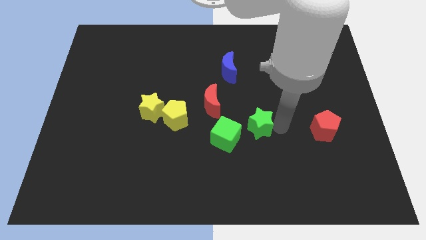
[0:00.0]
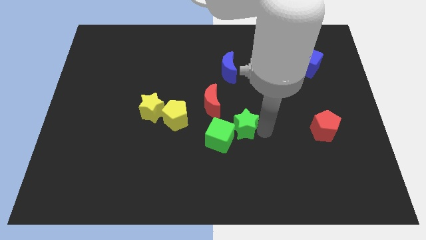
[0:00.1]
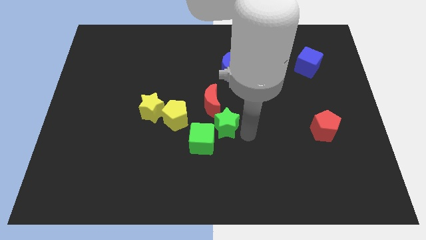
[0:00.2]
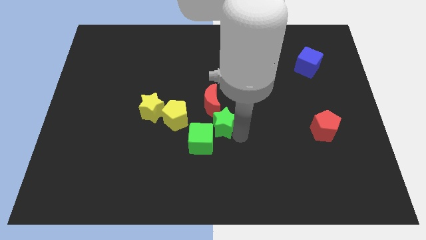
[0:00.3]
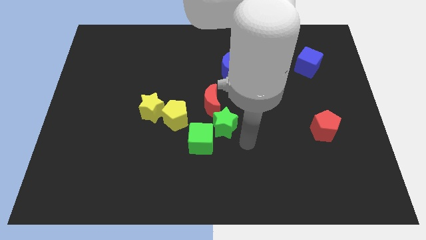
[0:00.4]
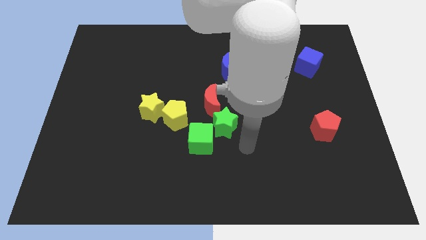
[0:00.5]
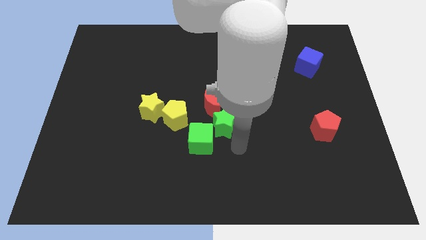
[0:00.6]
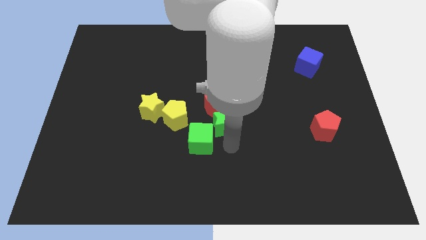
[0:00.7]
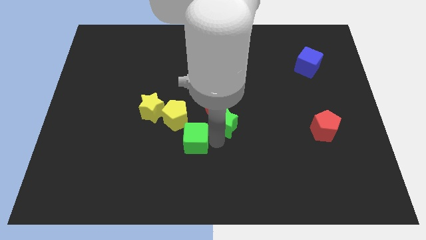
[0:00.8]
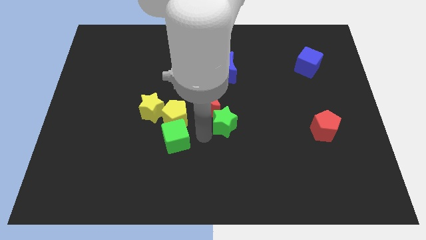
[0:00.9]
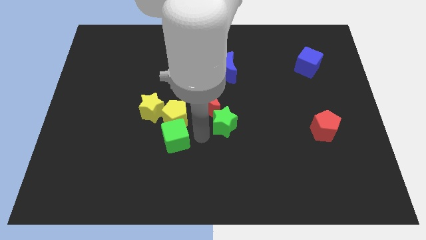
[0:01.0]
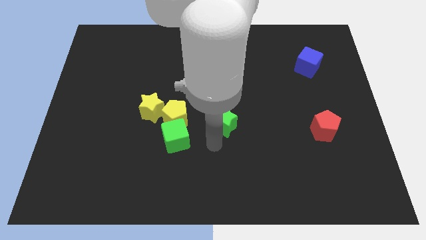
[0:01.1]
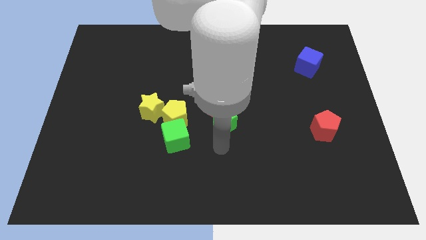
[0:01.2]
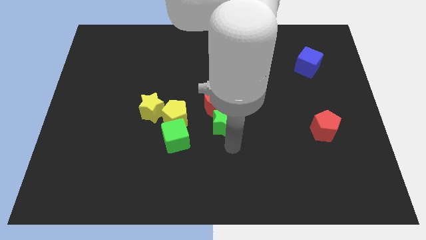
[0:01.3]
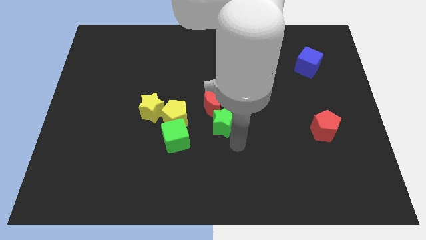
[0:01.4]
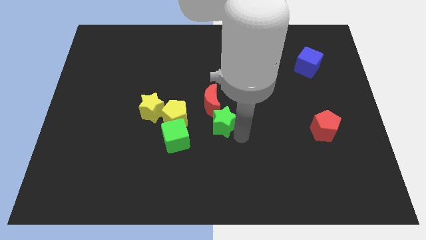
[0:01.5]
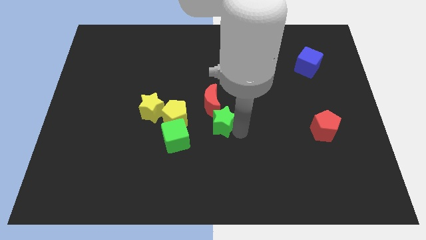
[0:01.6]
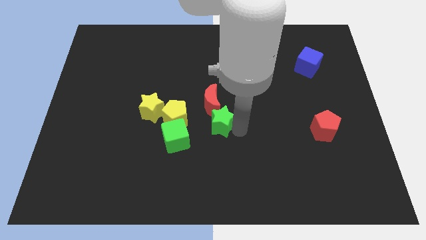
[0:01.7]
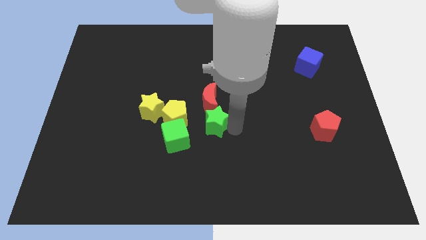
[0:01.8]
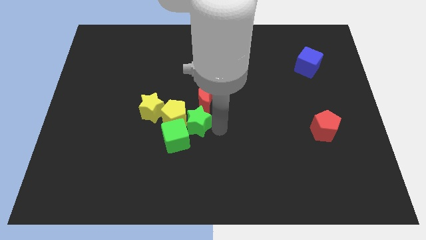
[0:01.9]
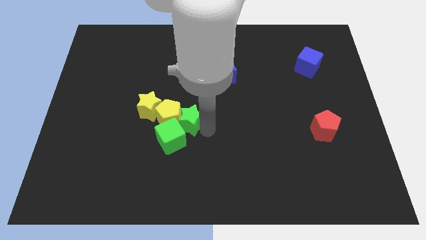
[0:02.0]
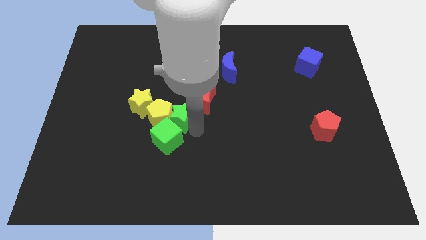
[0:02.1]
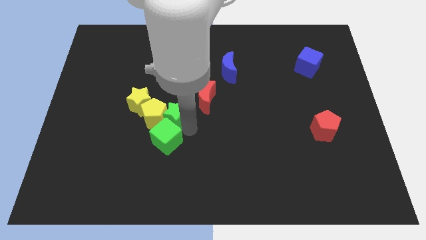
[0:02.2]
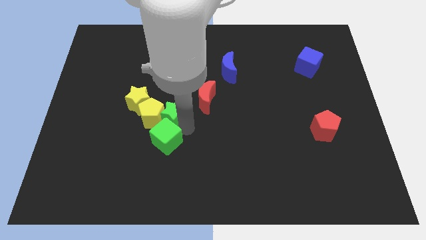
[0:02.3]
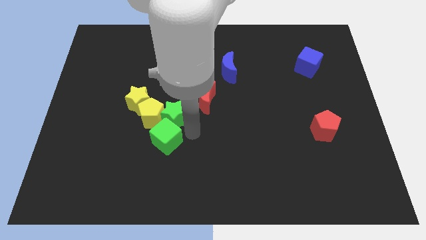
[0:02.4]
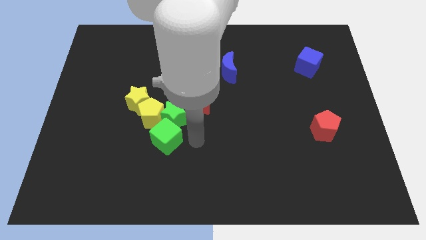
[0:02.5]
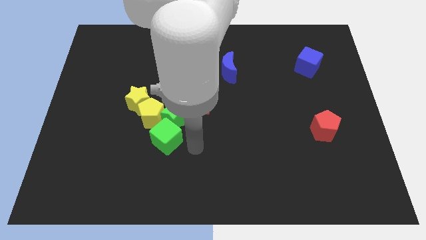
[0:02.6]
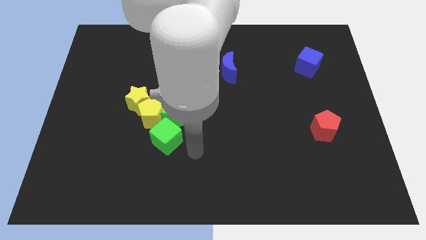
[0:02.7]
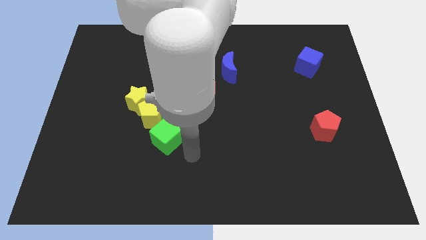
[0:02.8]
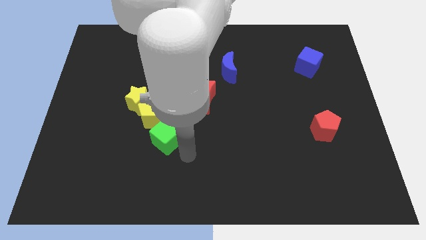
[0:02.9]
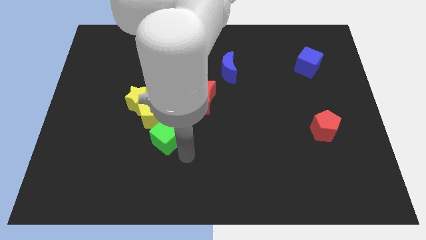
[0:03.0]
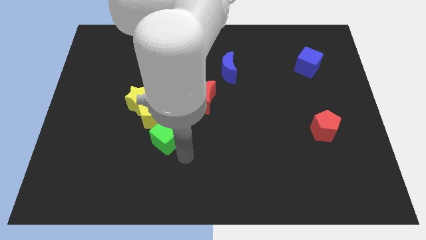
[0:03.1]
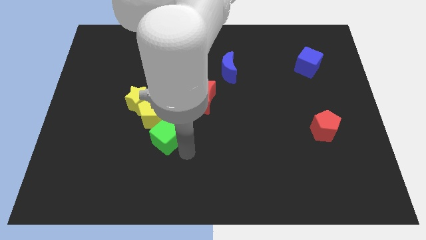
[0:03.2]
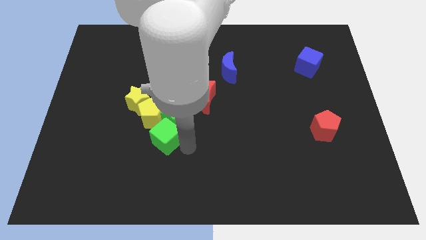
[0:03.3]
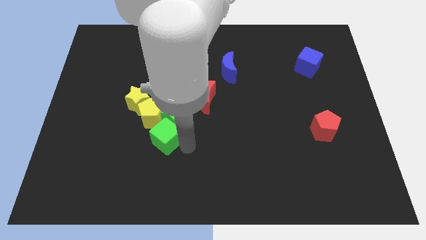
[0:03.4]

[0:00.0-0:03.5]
push the green blocks into the yellow blocks

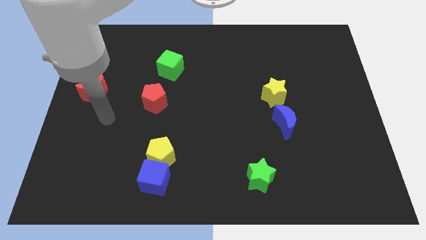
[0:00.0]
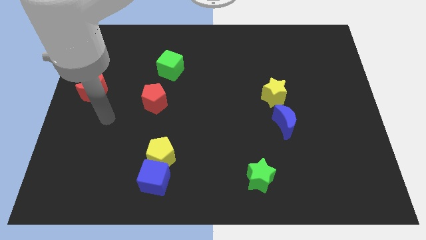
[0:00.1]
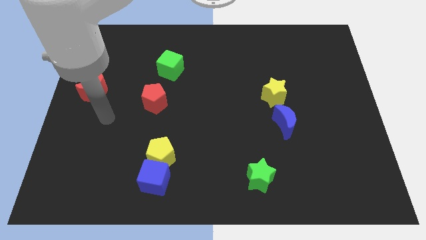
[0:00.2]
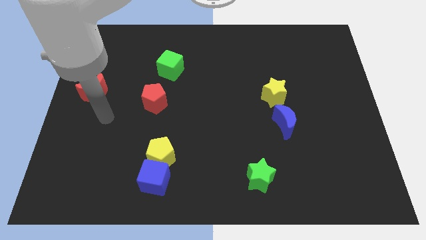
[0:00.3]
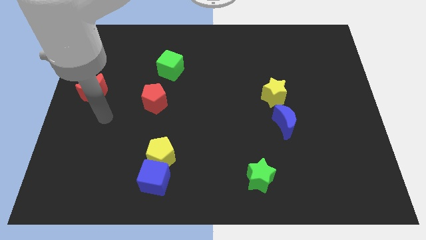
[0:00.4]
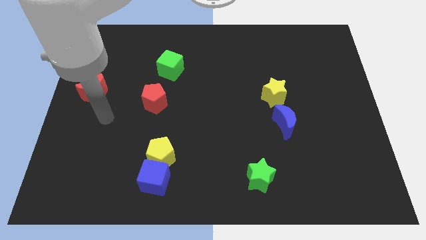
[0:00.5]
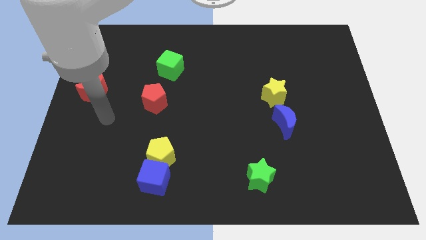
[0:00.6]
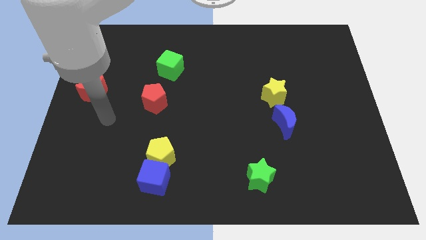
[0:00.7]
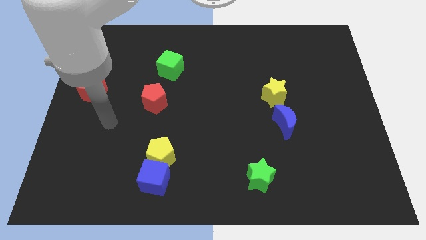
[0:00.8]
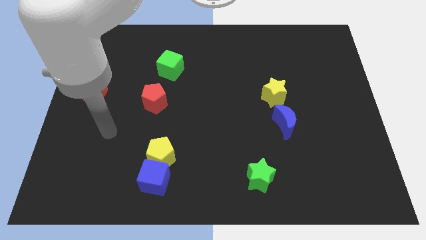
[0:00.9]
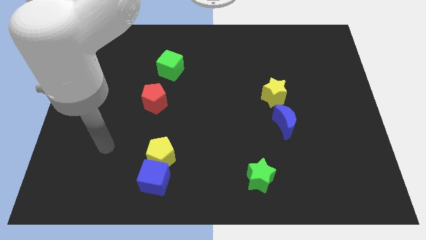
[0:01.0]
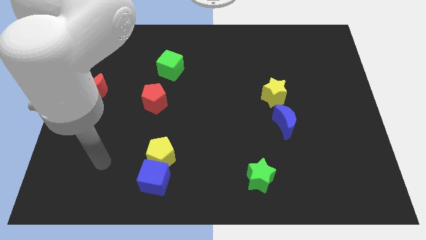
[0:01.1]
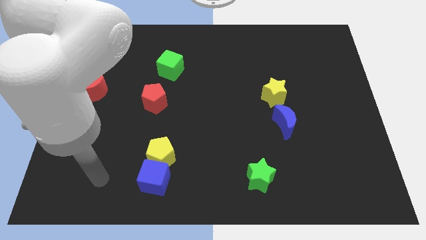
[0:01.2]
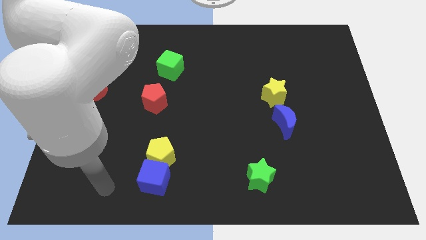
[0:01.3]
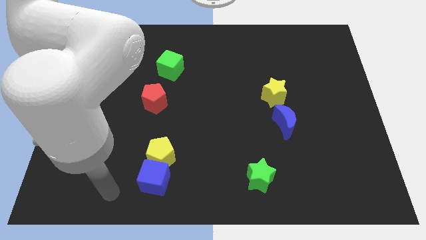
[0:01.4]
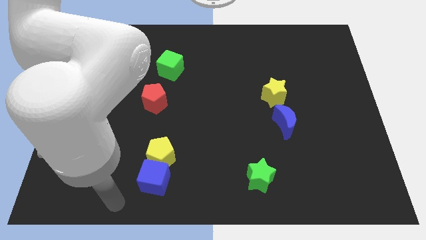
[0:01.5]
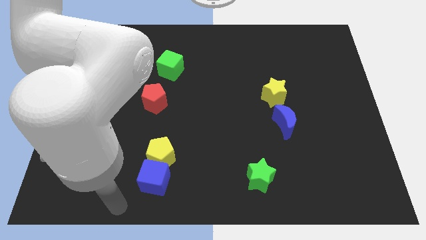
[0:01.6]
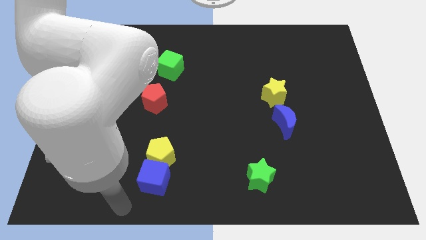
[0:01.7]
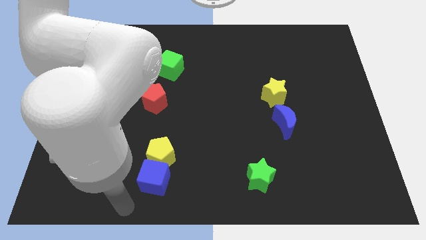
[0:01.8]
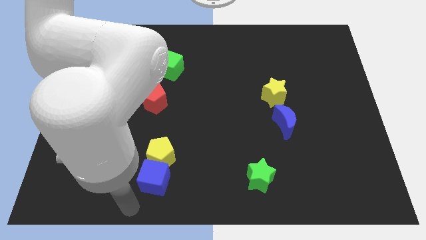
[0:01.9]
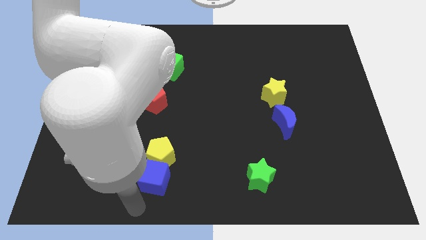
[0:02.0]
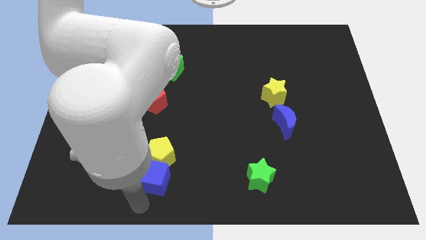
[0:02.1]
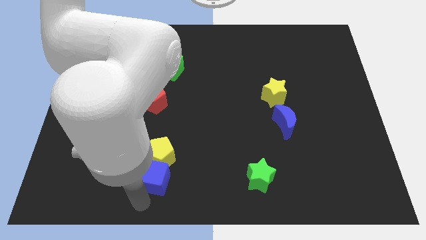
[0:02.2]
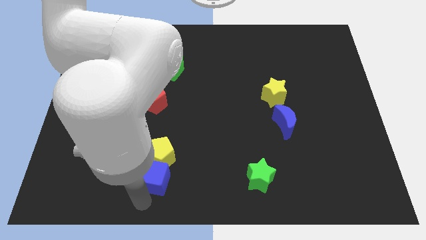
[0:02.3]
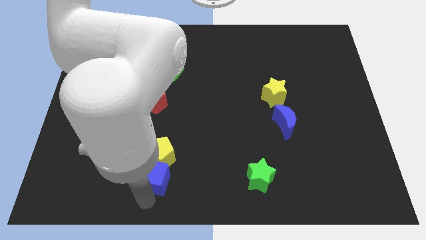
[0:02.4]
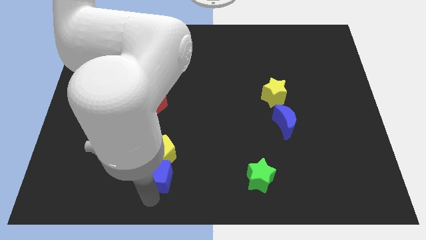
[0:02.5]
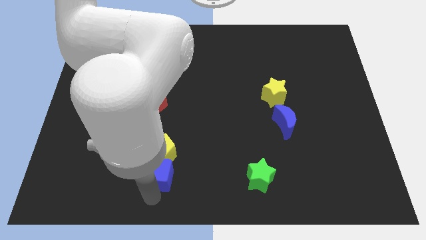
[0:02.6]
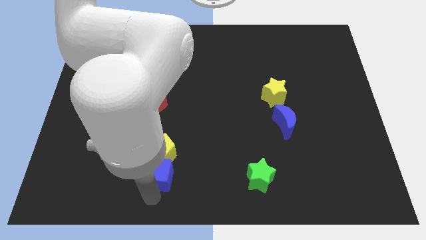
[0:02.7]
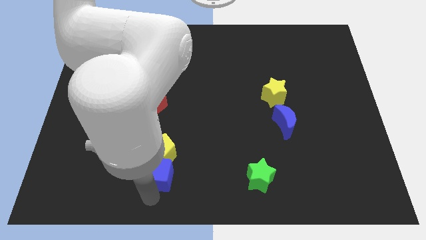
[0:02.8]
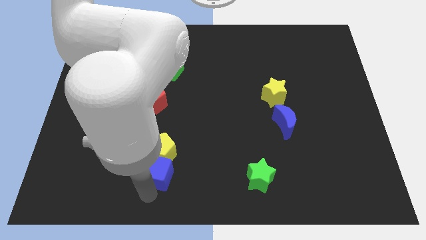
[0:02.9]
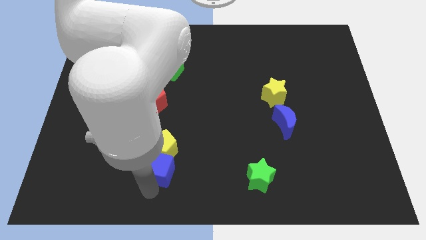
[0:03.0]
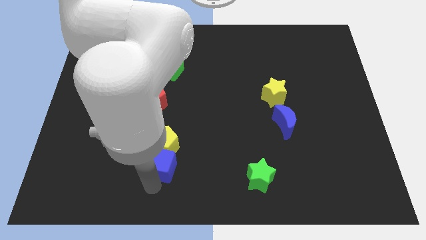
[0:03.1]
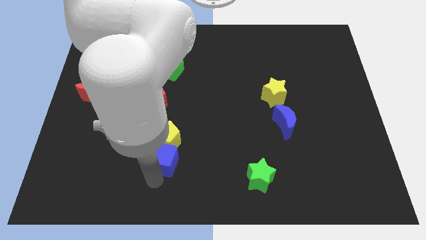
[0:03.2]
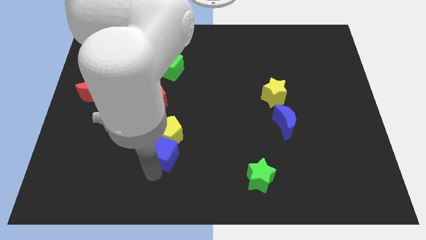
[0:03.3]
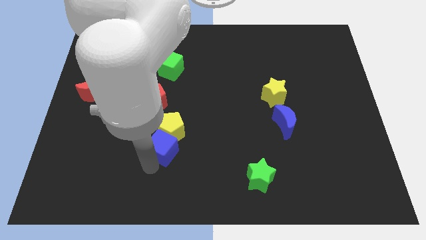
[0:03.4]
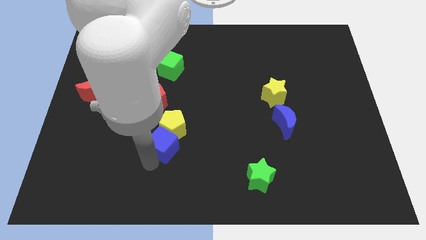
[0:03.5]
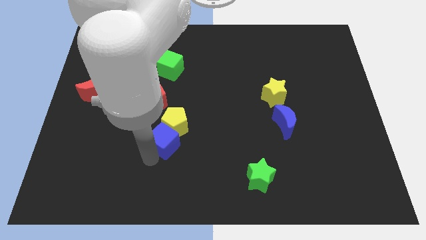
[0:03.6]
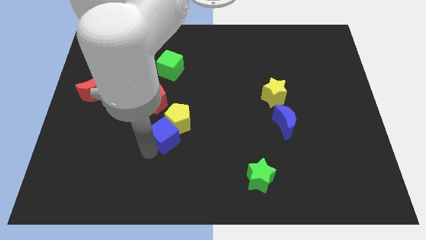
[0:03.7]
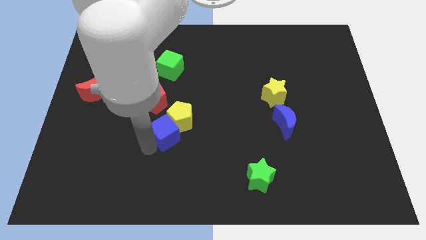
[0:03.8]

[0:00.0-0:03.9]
push blue cube into yellow pentagon

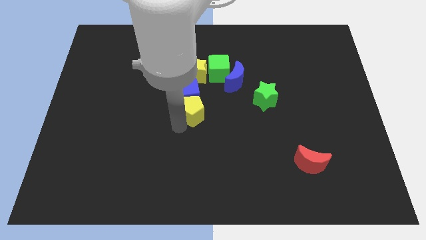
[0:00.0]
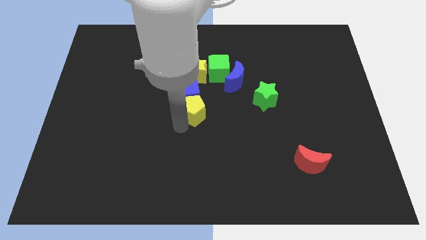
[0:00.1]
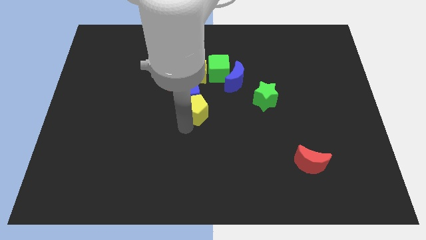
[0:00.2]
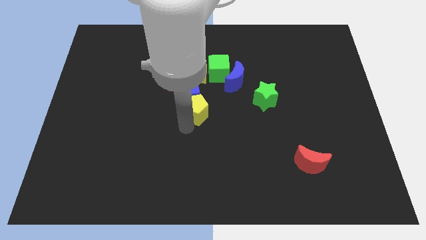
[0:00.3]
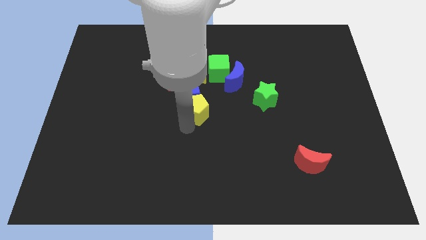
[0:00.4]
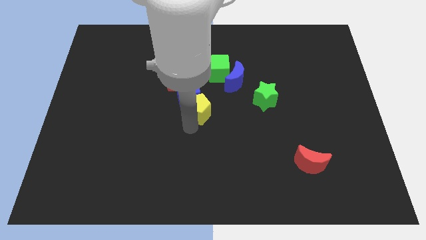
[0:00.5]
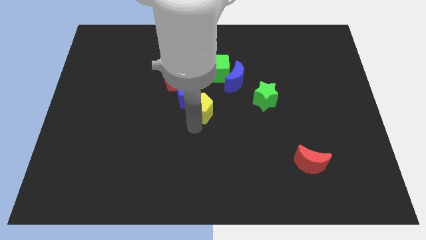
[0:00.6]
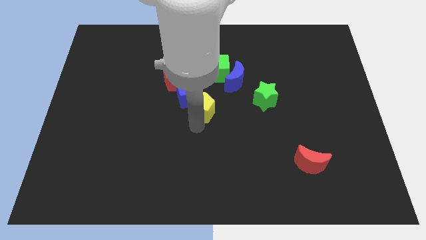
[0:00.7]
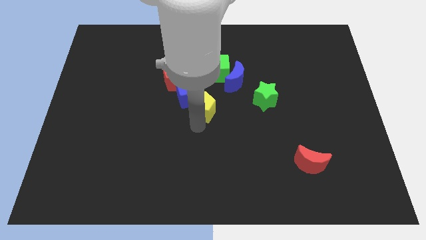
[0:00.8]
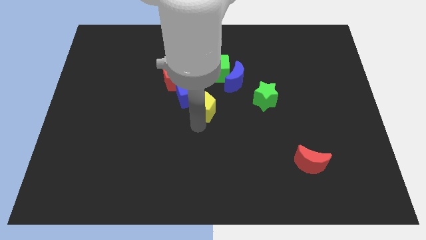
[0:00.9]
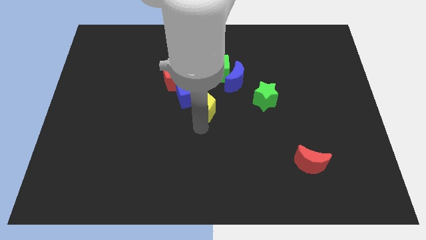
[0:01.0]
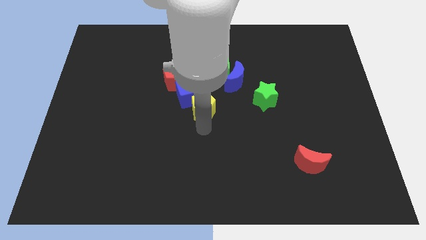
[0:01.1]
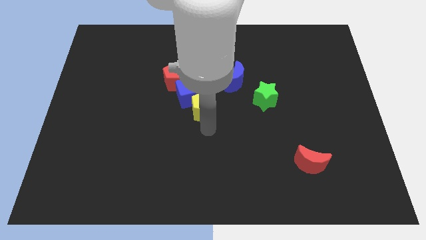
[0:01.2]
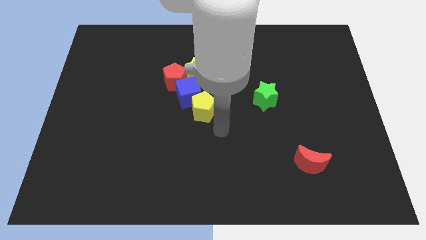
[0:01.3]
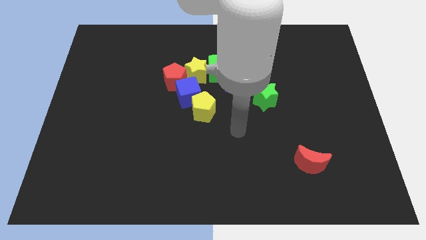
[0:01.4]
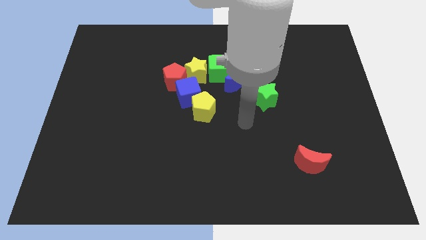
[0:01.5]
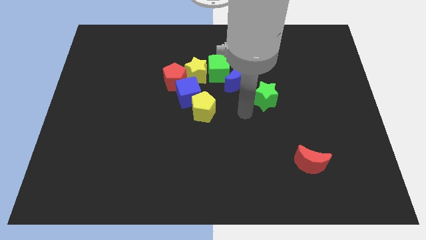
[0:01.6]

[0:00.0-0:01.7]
slide the yellow pentagon to the bottom right side of the blue cube
